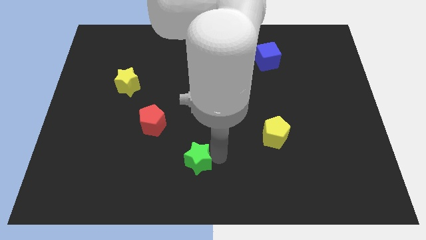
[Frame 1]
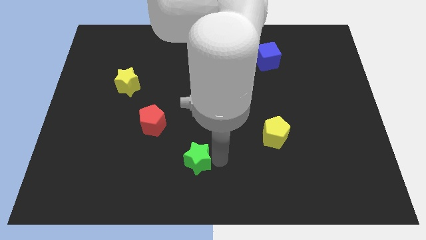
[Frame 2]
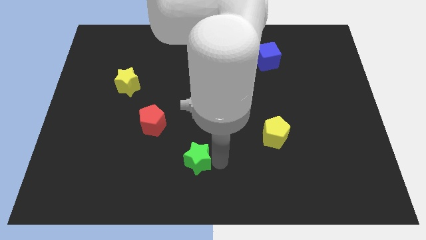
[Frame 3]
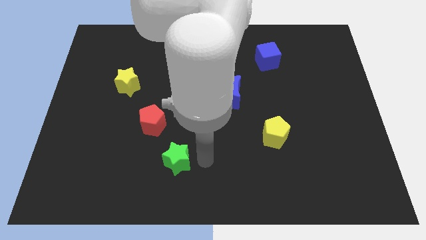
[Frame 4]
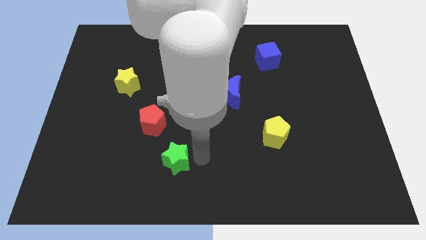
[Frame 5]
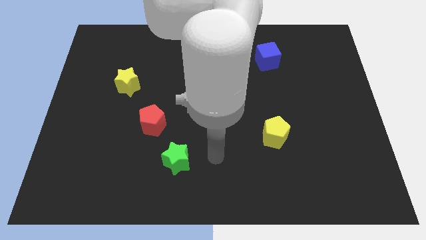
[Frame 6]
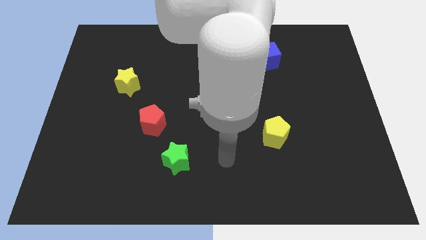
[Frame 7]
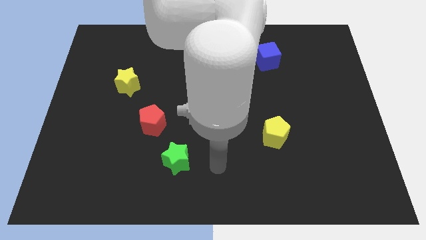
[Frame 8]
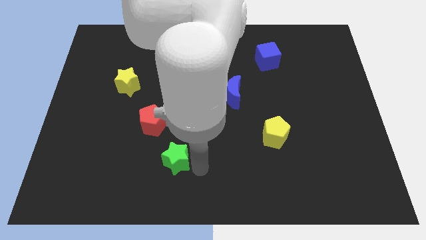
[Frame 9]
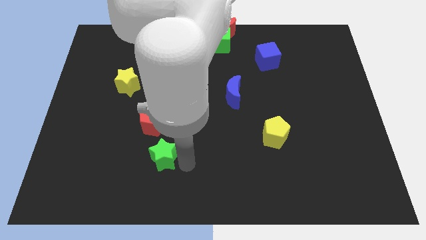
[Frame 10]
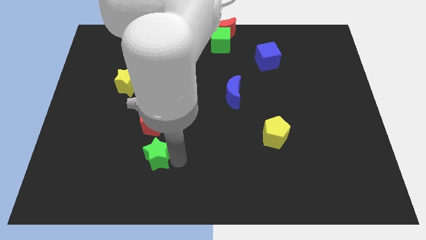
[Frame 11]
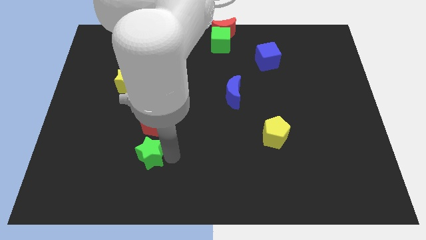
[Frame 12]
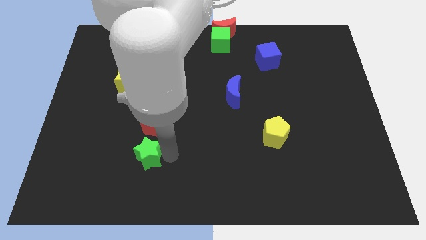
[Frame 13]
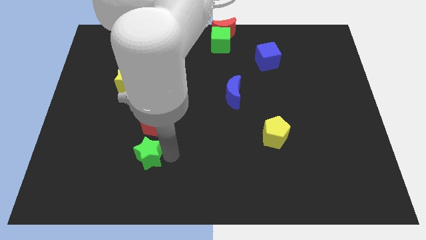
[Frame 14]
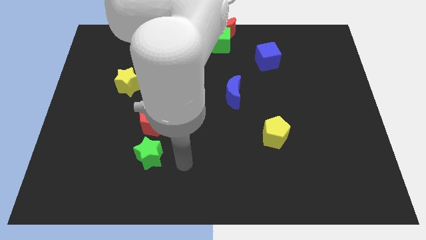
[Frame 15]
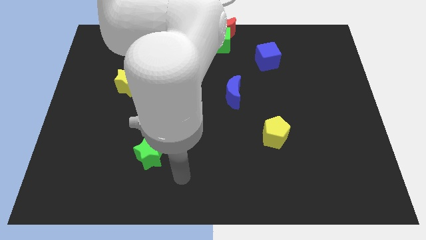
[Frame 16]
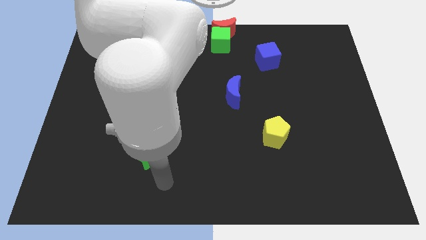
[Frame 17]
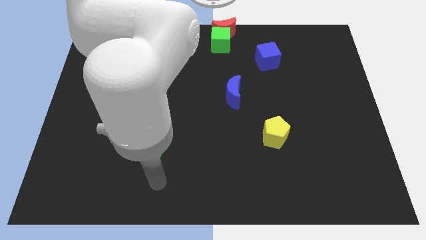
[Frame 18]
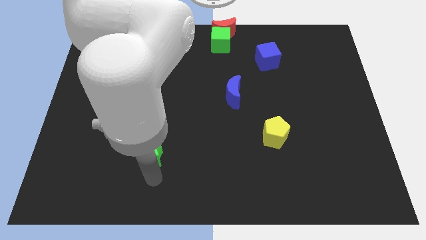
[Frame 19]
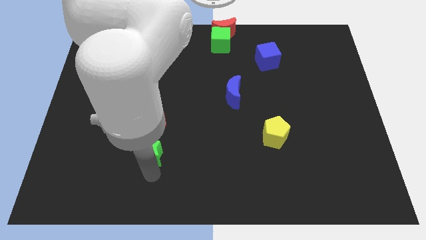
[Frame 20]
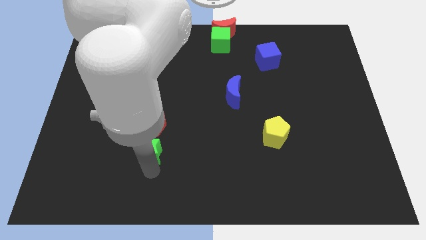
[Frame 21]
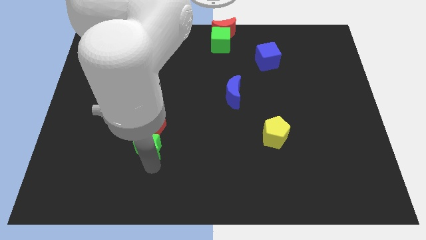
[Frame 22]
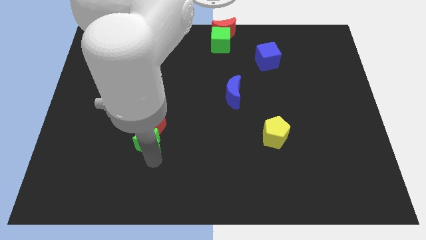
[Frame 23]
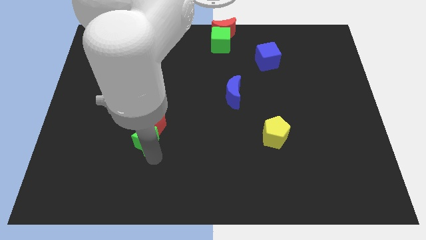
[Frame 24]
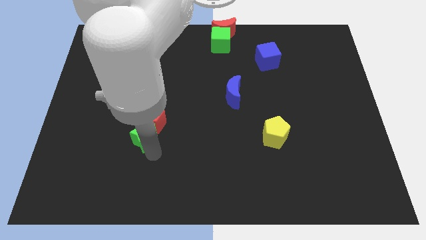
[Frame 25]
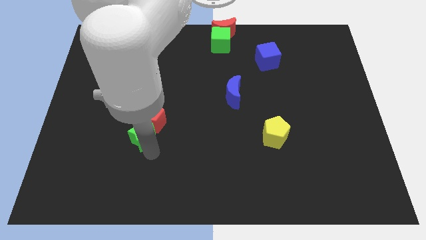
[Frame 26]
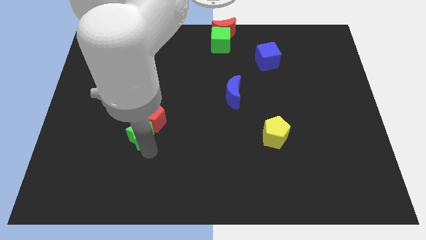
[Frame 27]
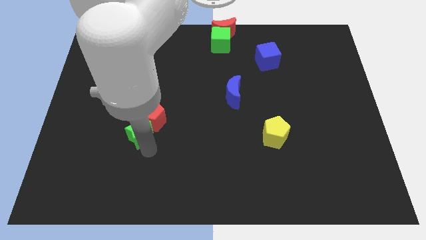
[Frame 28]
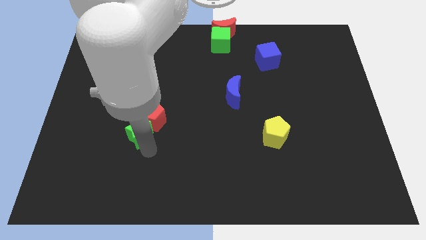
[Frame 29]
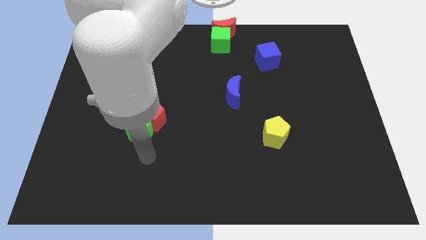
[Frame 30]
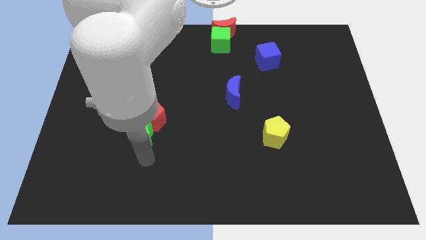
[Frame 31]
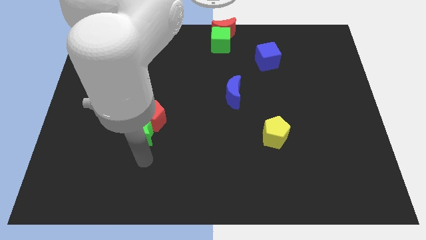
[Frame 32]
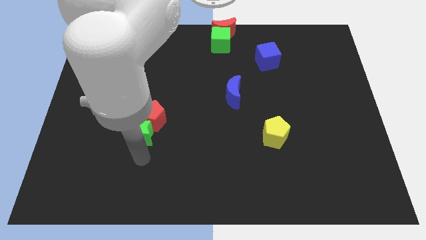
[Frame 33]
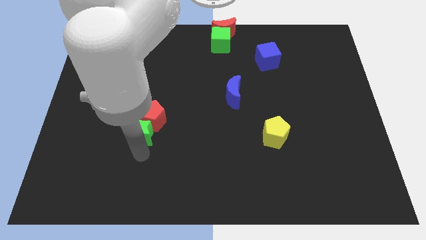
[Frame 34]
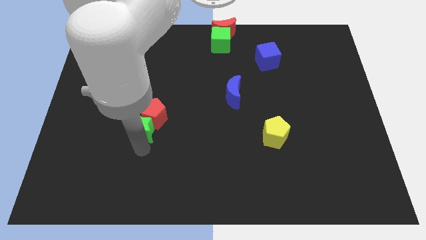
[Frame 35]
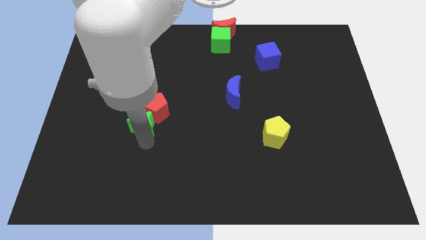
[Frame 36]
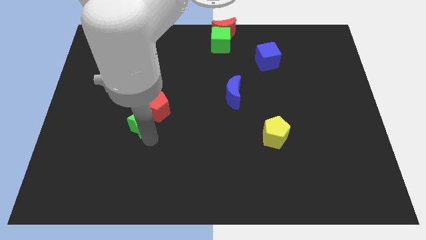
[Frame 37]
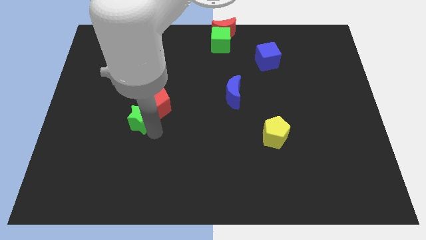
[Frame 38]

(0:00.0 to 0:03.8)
push green star into red pentagon

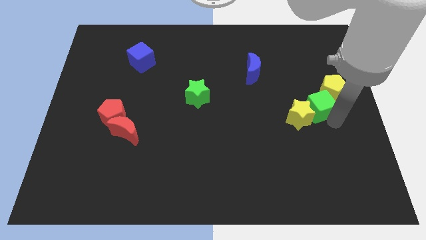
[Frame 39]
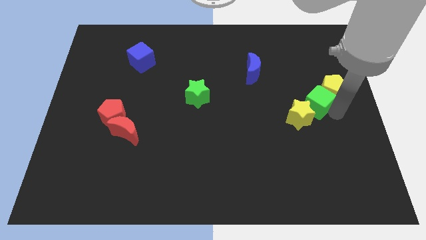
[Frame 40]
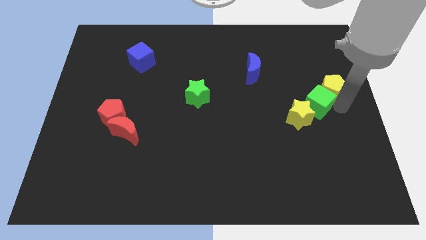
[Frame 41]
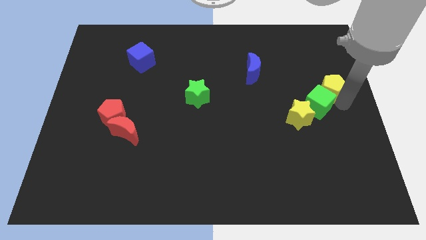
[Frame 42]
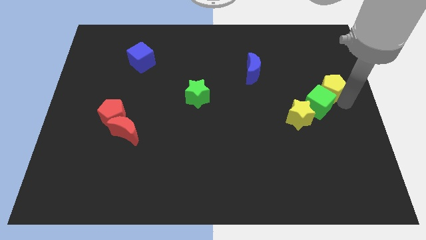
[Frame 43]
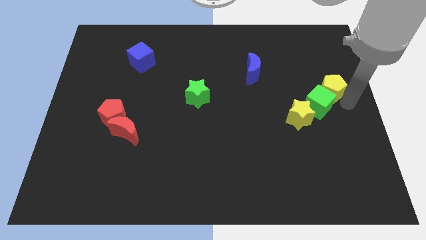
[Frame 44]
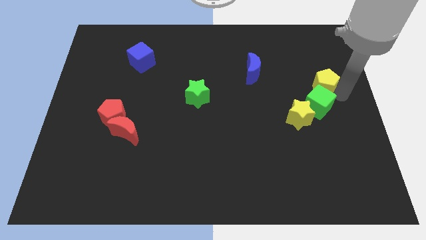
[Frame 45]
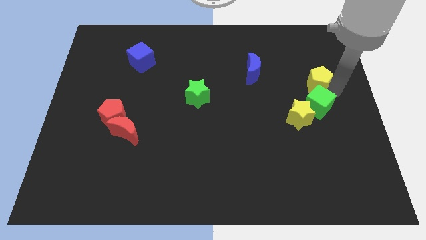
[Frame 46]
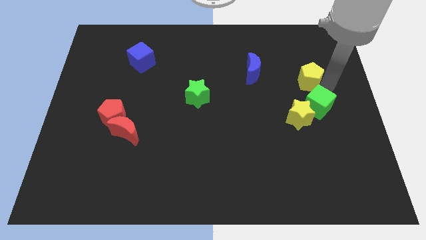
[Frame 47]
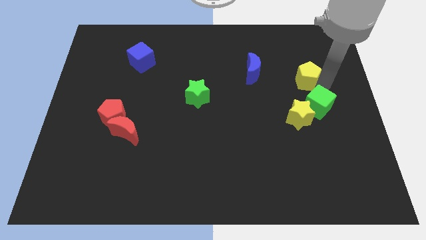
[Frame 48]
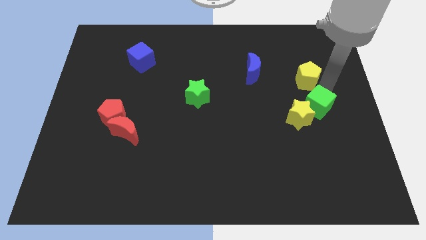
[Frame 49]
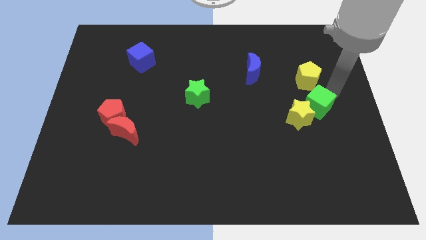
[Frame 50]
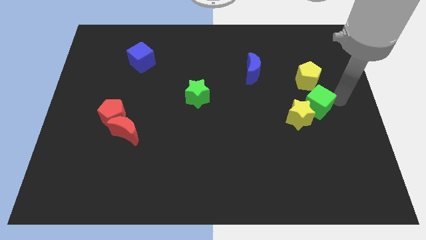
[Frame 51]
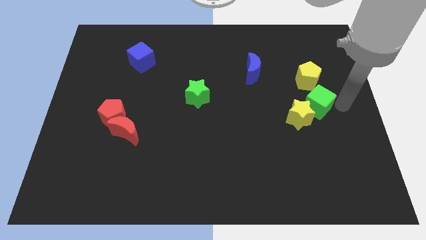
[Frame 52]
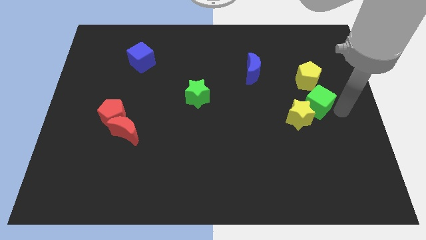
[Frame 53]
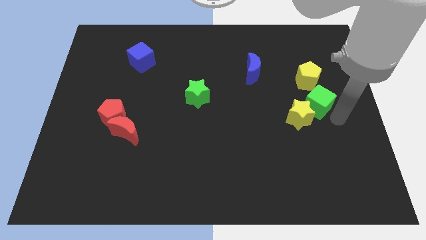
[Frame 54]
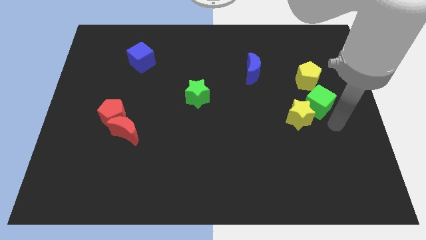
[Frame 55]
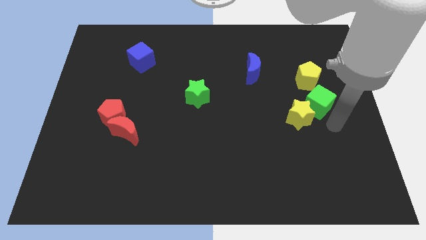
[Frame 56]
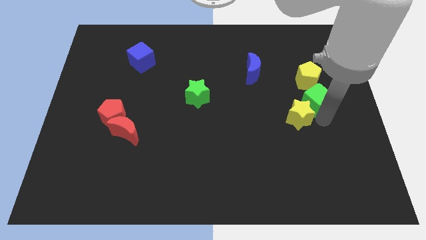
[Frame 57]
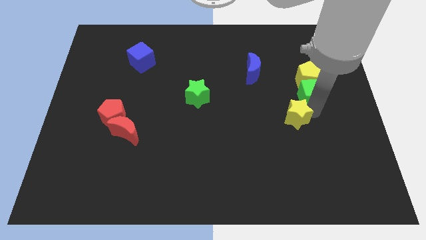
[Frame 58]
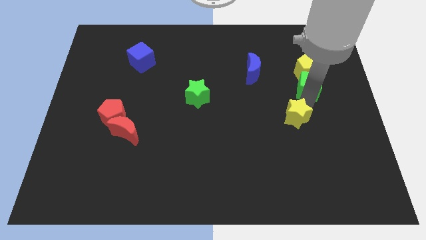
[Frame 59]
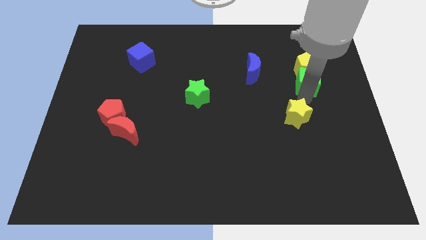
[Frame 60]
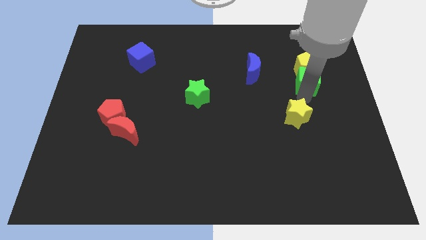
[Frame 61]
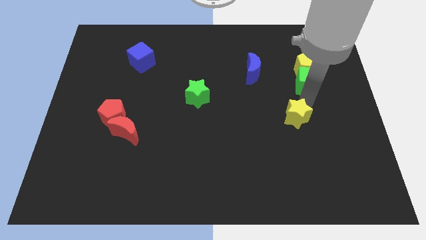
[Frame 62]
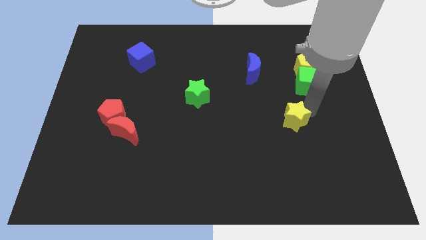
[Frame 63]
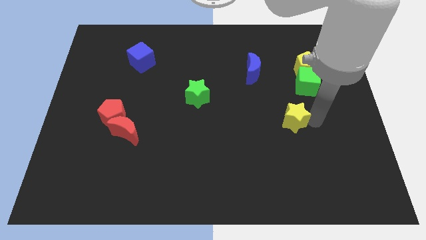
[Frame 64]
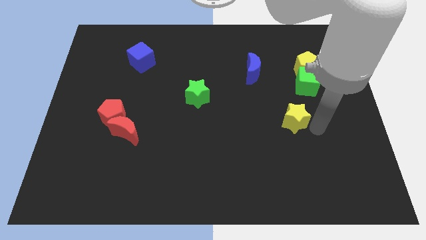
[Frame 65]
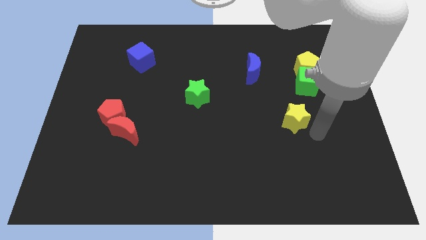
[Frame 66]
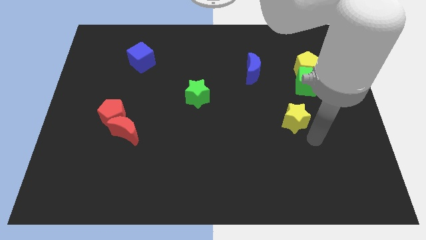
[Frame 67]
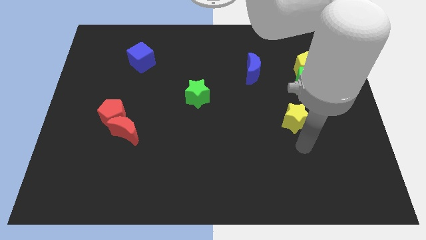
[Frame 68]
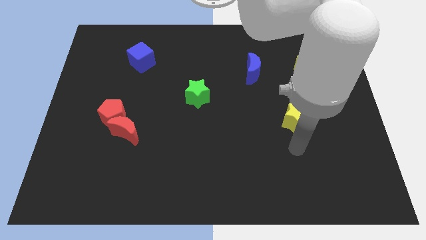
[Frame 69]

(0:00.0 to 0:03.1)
place green cube to the bottom of the yellow pentagon
